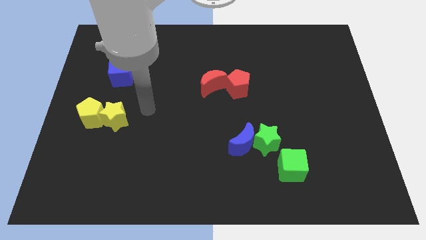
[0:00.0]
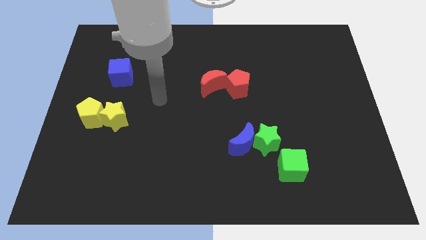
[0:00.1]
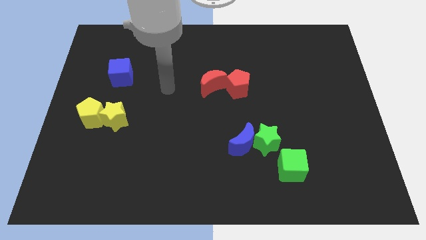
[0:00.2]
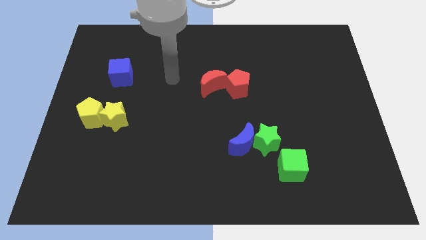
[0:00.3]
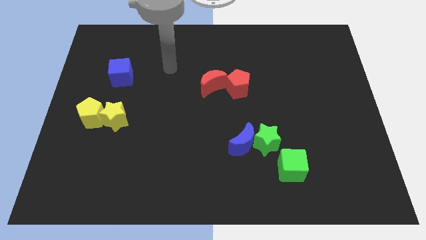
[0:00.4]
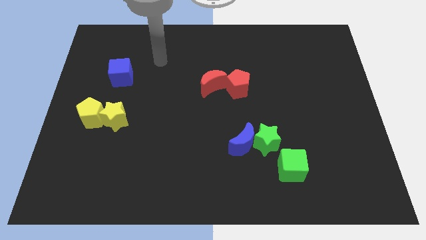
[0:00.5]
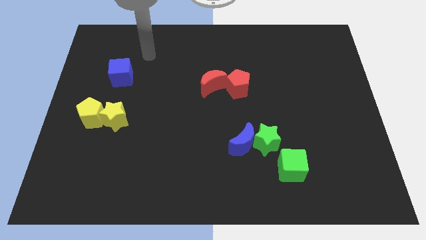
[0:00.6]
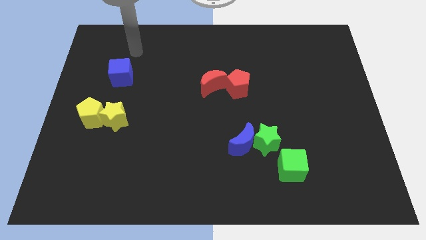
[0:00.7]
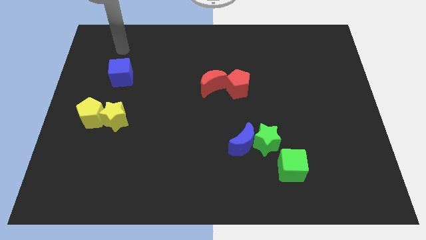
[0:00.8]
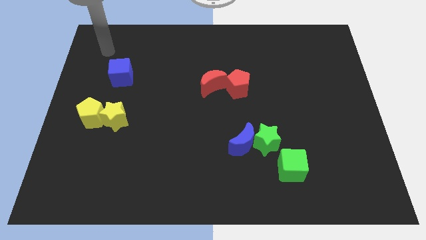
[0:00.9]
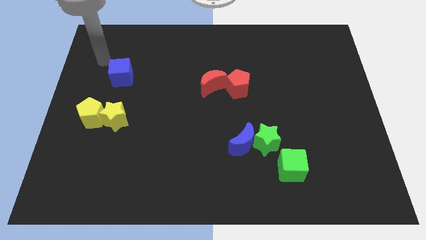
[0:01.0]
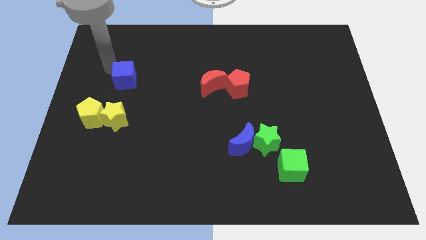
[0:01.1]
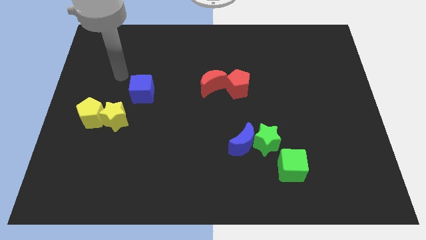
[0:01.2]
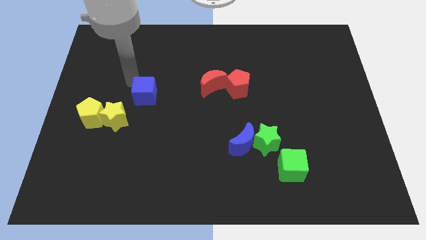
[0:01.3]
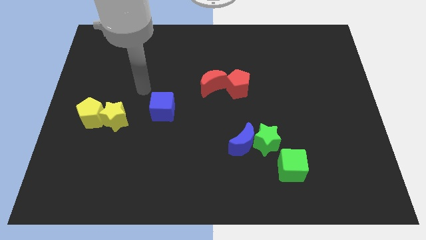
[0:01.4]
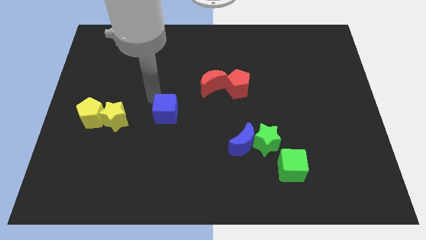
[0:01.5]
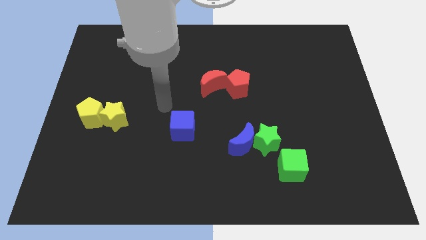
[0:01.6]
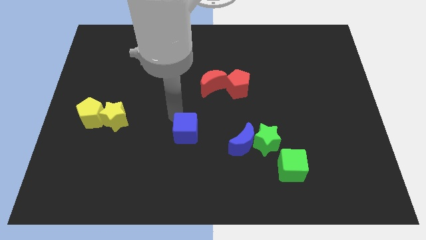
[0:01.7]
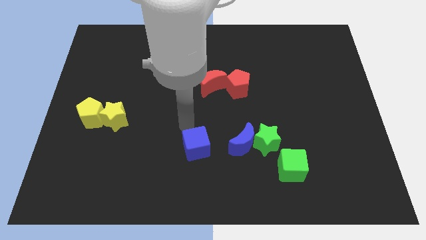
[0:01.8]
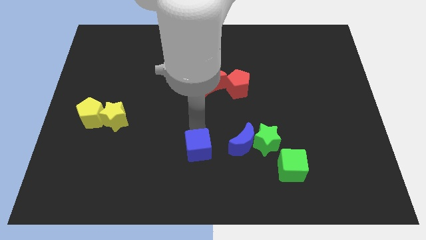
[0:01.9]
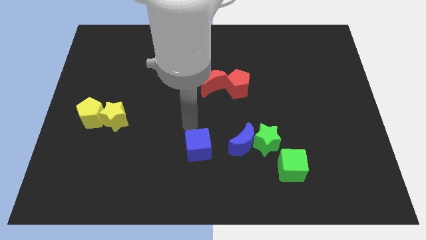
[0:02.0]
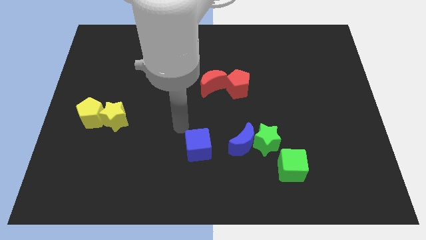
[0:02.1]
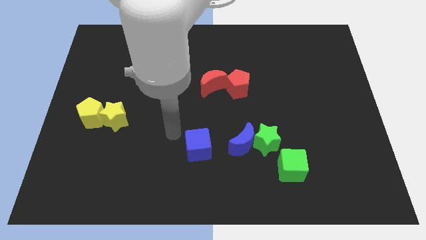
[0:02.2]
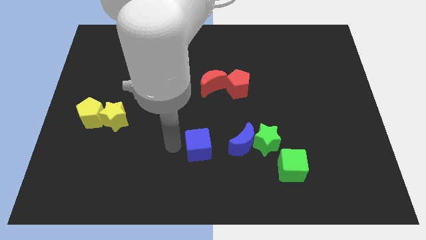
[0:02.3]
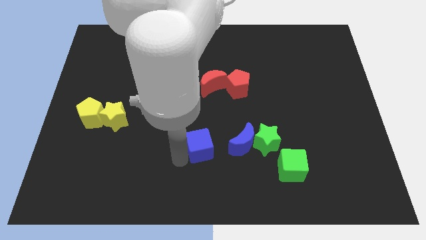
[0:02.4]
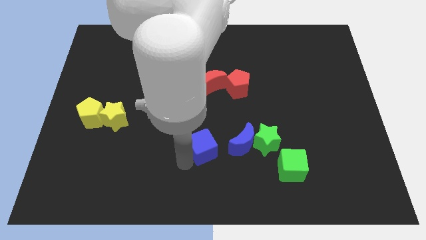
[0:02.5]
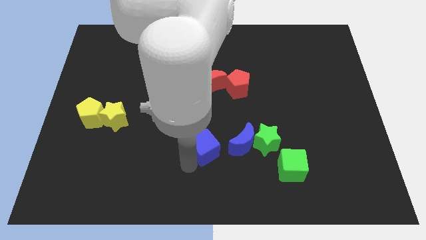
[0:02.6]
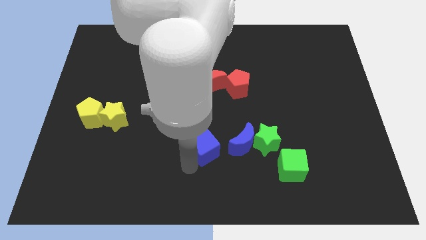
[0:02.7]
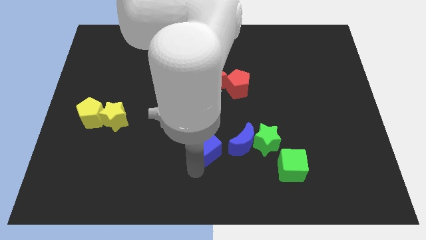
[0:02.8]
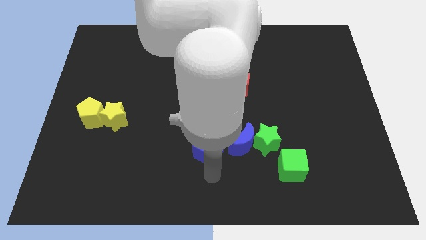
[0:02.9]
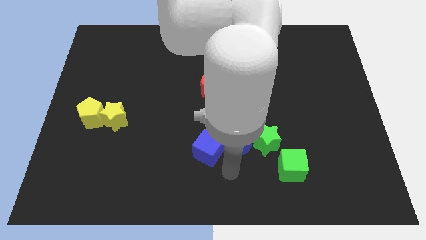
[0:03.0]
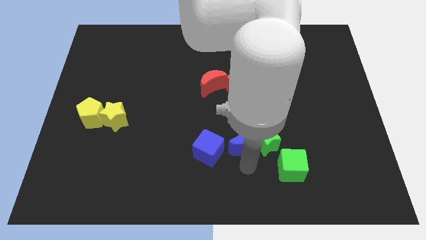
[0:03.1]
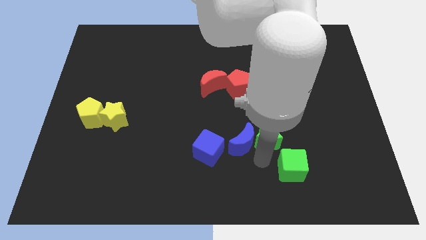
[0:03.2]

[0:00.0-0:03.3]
push the blue cube to the bottom center of the board

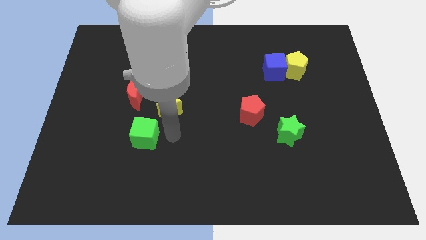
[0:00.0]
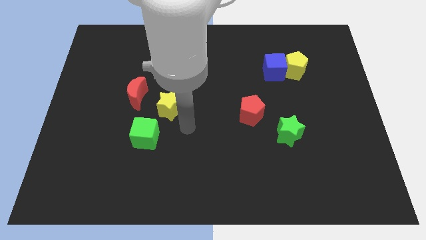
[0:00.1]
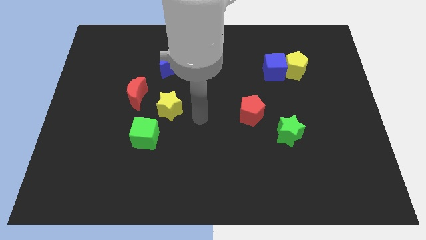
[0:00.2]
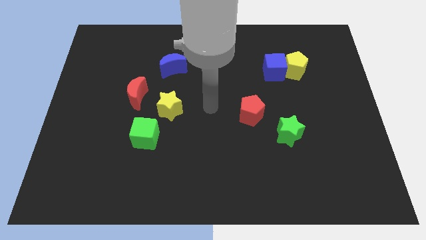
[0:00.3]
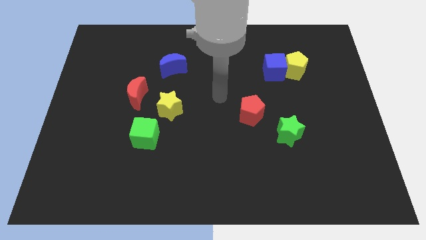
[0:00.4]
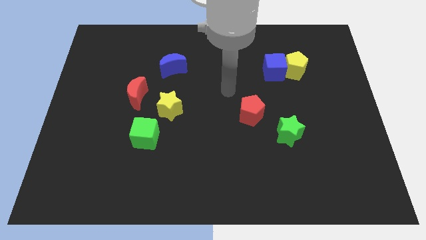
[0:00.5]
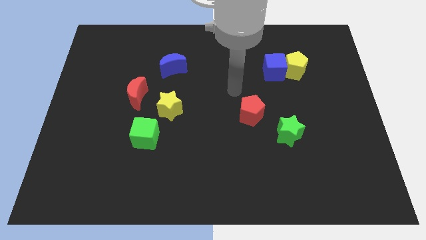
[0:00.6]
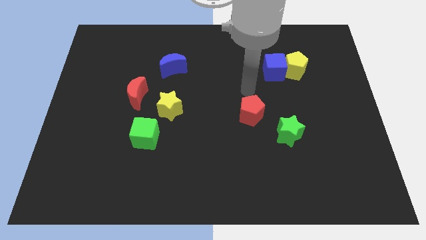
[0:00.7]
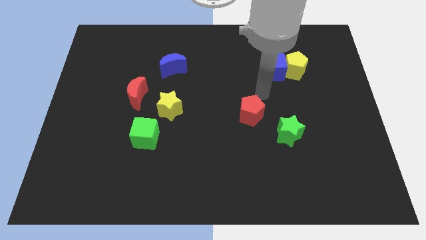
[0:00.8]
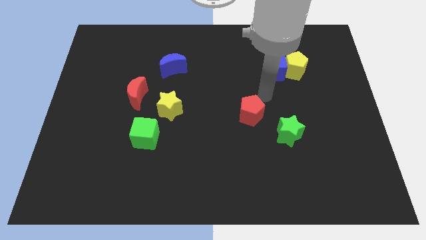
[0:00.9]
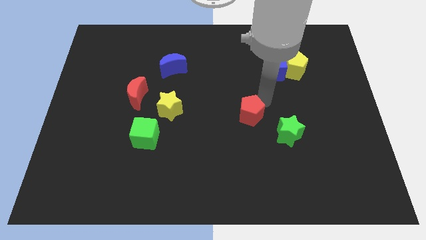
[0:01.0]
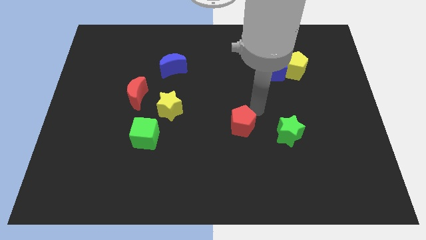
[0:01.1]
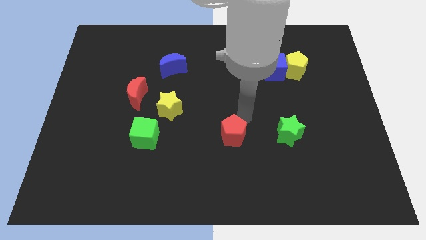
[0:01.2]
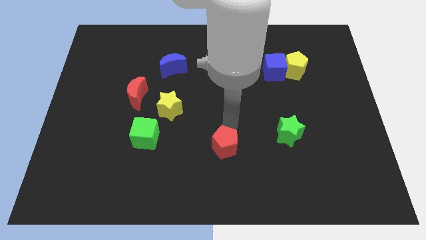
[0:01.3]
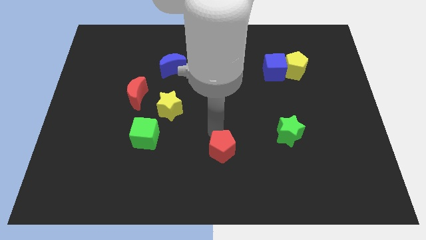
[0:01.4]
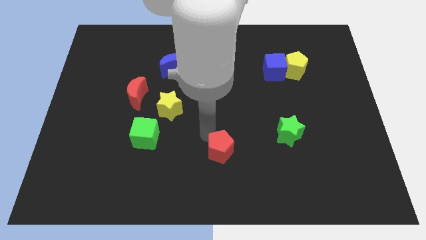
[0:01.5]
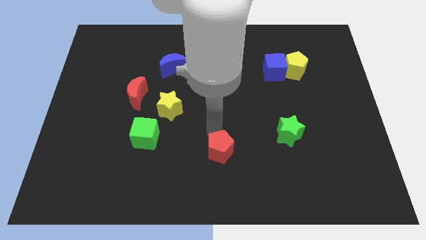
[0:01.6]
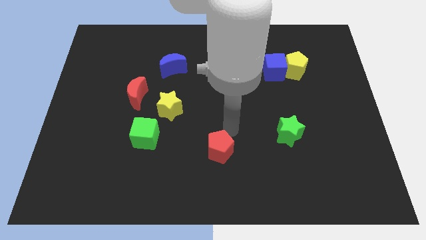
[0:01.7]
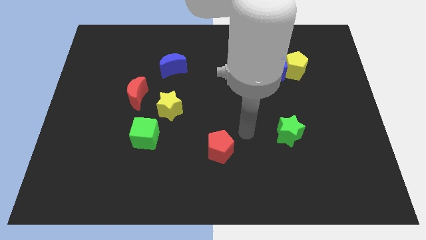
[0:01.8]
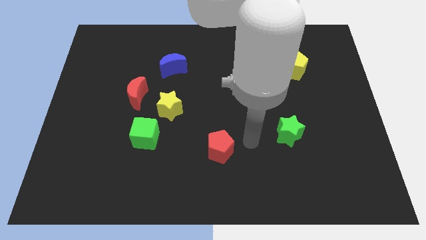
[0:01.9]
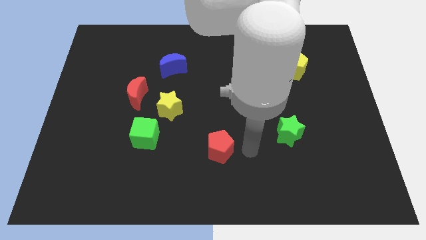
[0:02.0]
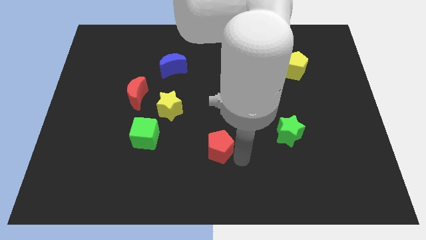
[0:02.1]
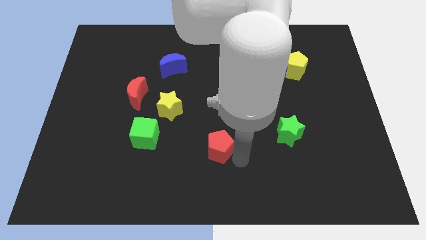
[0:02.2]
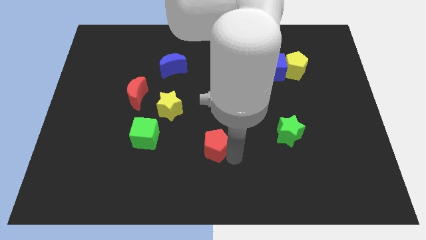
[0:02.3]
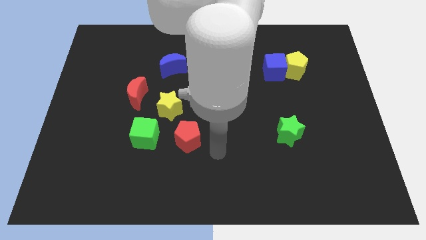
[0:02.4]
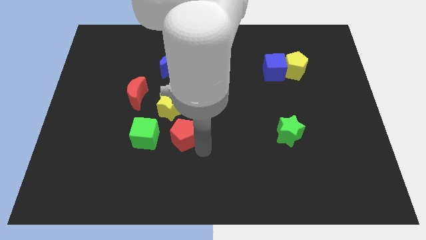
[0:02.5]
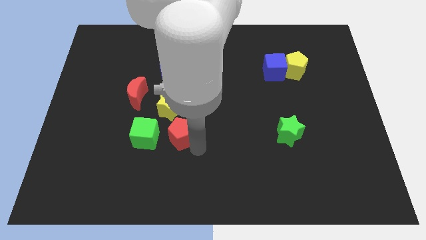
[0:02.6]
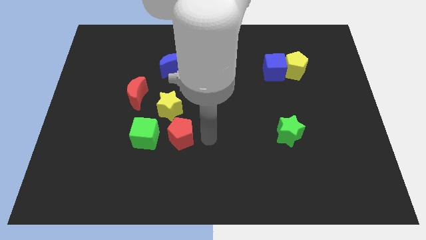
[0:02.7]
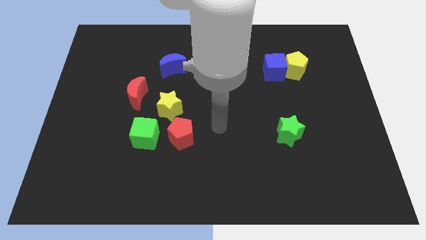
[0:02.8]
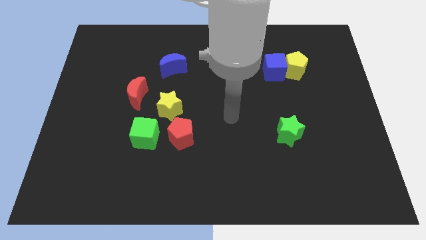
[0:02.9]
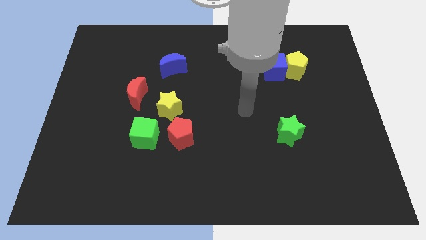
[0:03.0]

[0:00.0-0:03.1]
slide the red pentagon towards the green cube

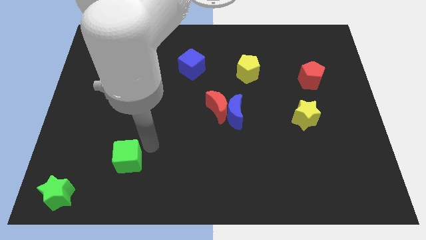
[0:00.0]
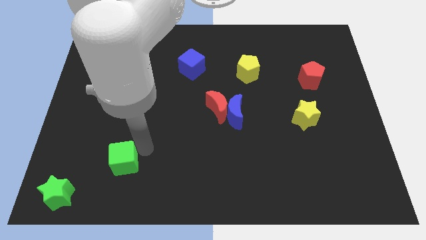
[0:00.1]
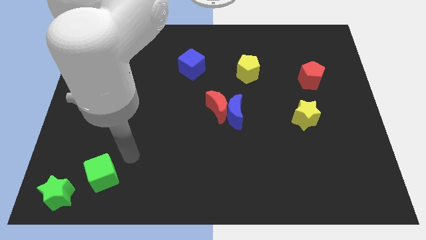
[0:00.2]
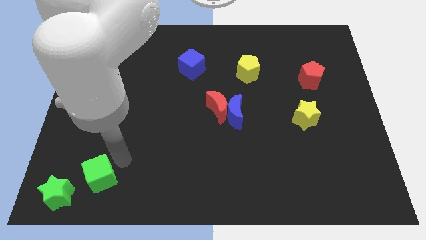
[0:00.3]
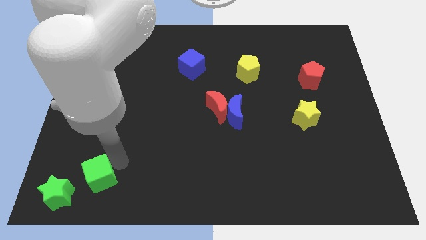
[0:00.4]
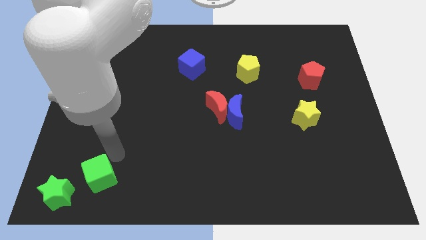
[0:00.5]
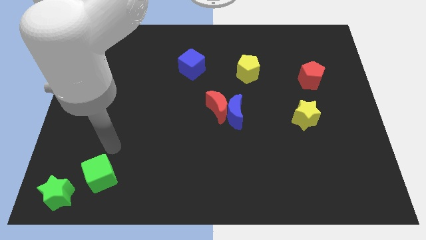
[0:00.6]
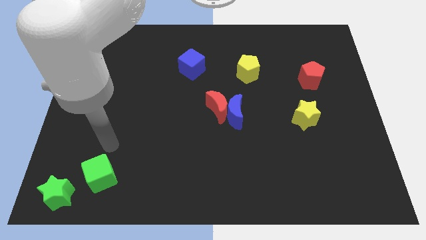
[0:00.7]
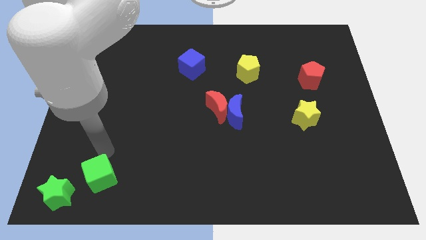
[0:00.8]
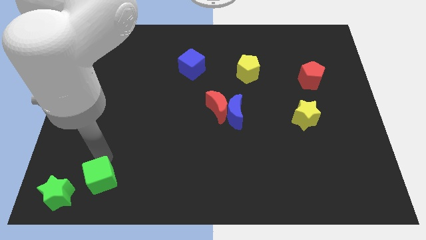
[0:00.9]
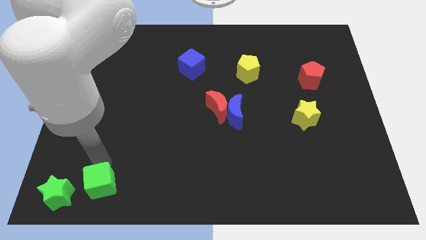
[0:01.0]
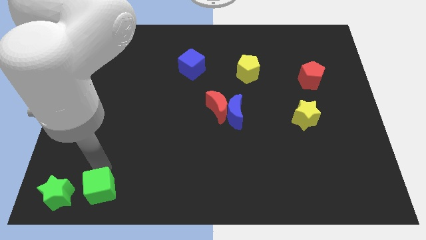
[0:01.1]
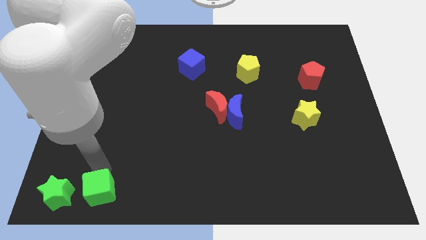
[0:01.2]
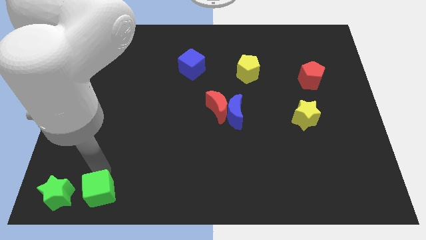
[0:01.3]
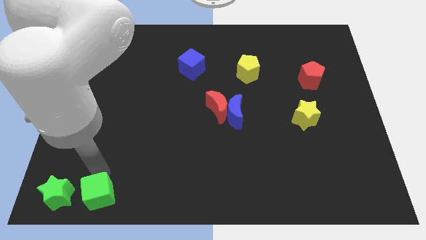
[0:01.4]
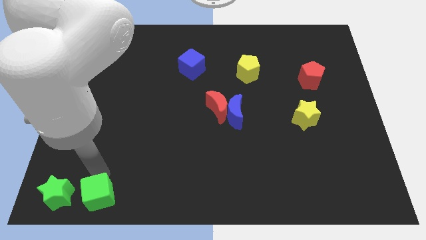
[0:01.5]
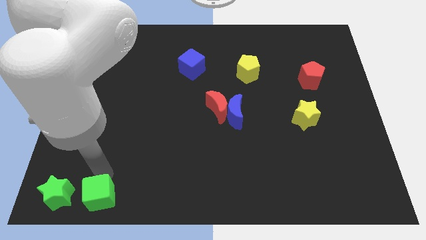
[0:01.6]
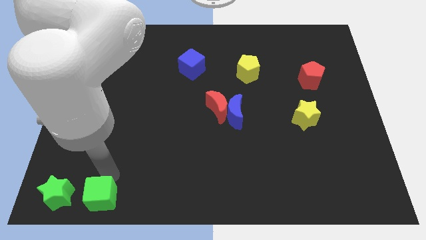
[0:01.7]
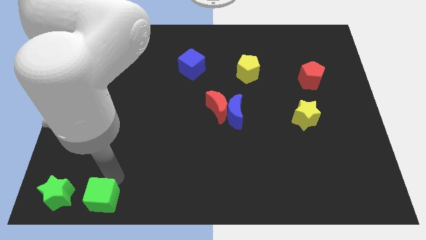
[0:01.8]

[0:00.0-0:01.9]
push the green cube parallel to the green star

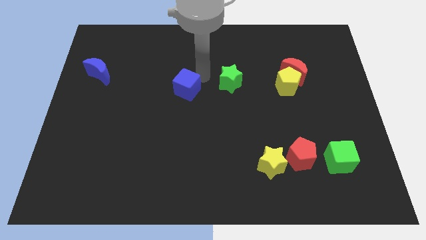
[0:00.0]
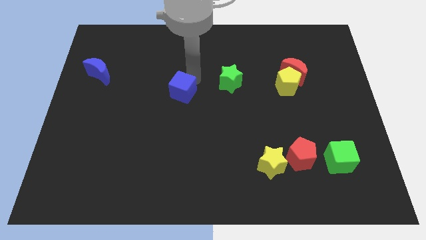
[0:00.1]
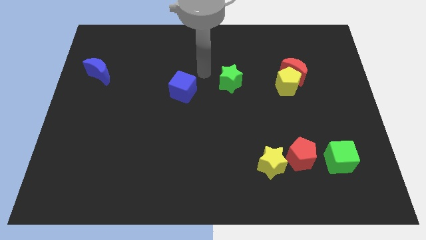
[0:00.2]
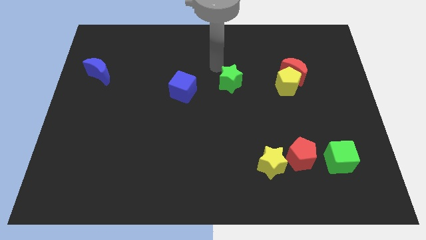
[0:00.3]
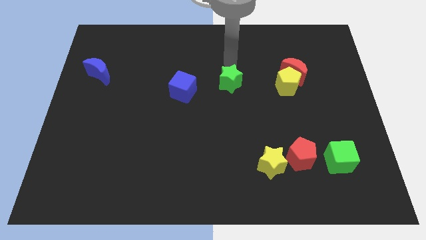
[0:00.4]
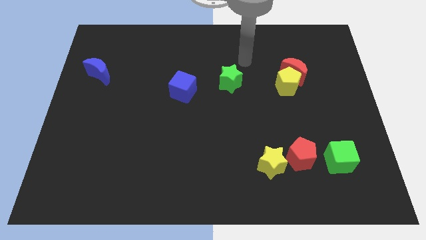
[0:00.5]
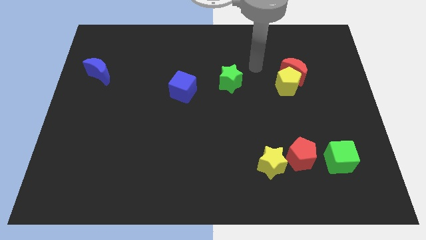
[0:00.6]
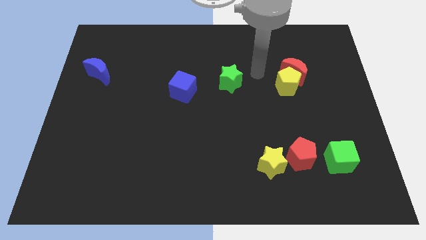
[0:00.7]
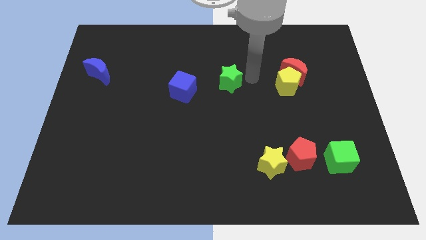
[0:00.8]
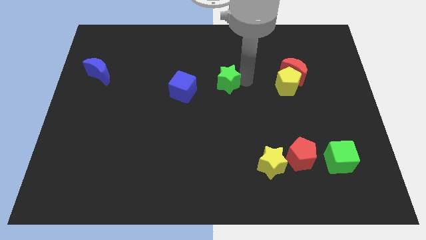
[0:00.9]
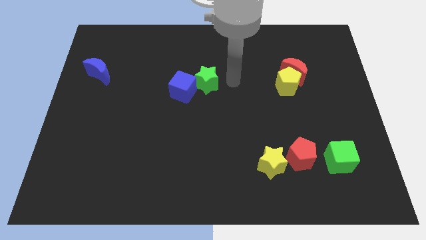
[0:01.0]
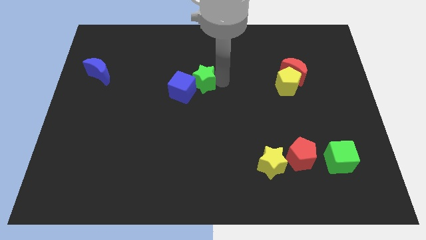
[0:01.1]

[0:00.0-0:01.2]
place the arm to the right of the green star
